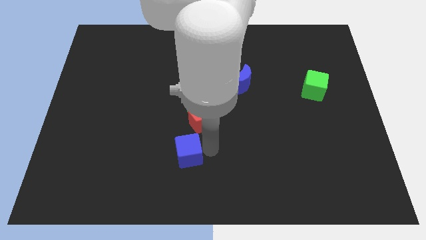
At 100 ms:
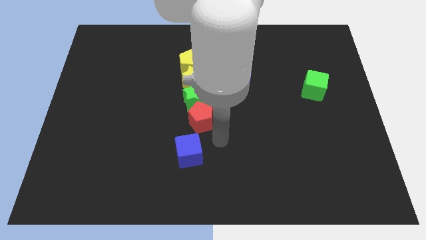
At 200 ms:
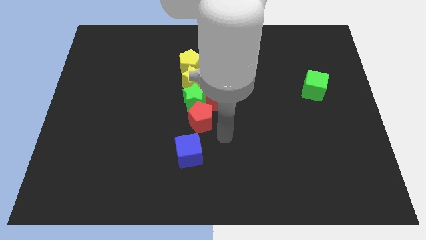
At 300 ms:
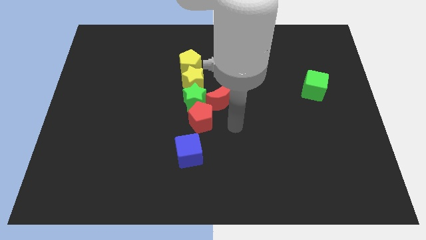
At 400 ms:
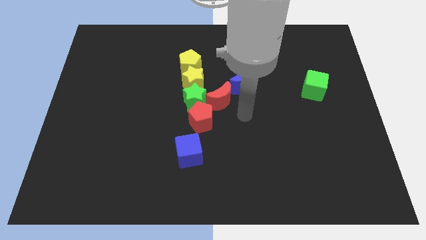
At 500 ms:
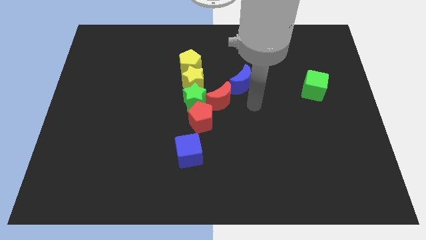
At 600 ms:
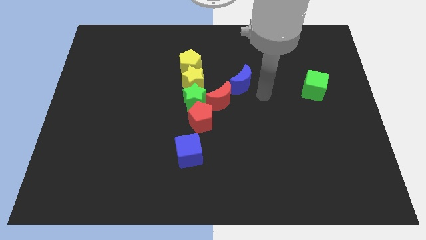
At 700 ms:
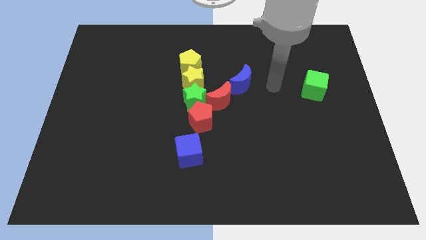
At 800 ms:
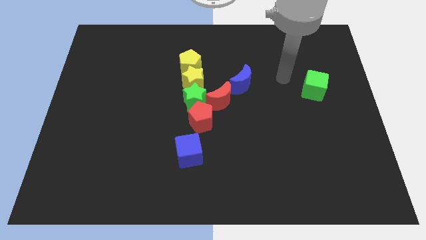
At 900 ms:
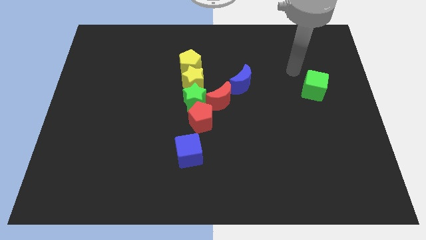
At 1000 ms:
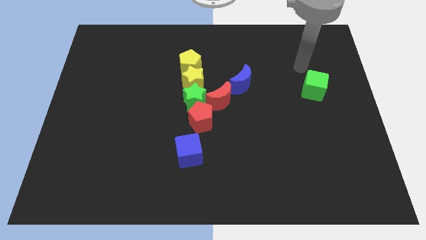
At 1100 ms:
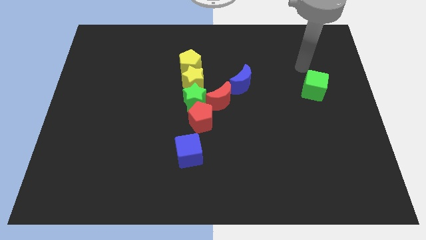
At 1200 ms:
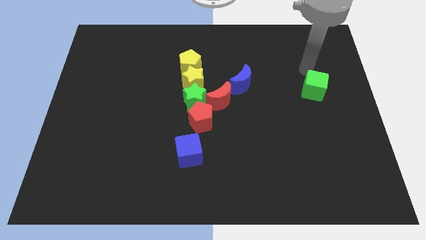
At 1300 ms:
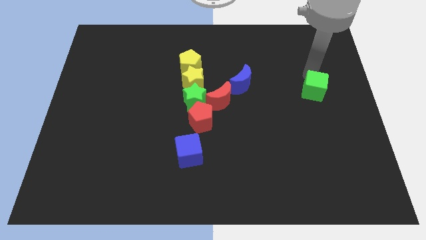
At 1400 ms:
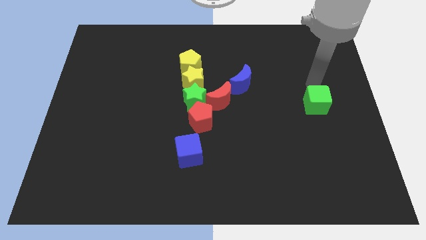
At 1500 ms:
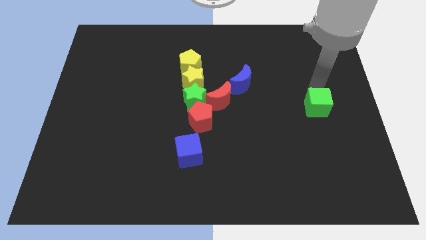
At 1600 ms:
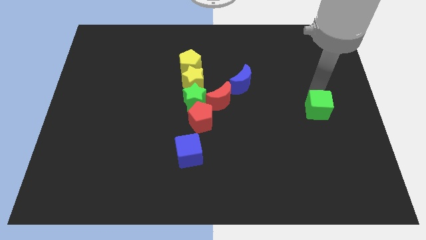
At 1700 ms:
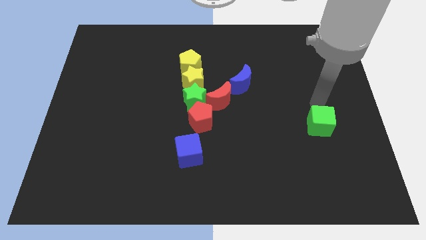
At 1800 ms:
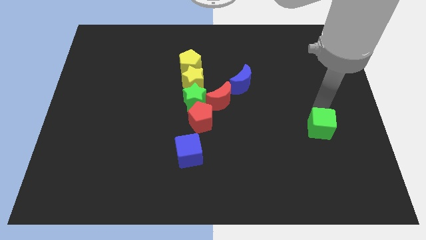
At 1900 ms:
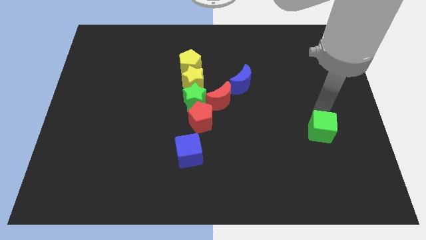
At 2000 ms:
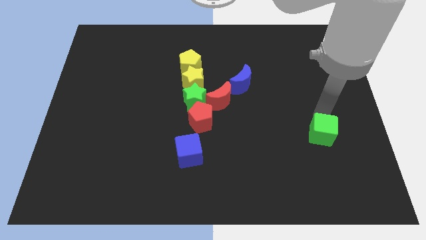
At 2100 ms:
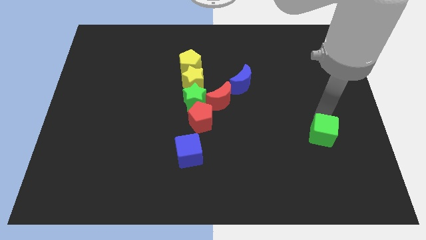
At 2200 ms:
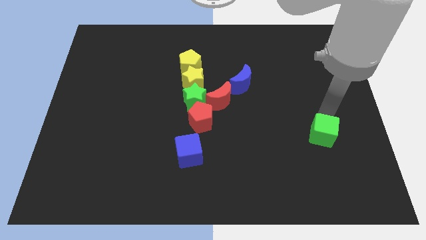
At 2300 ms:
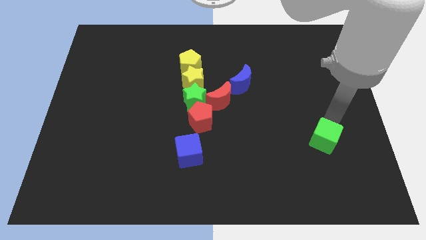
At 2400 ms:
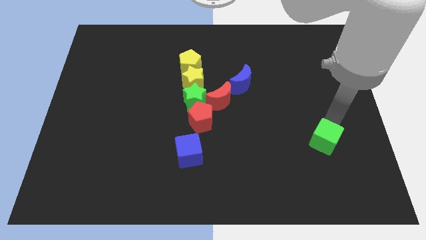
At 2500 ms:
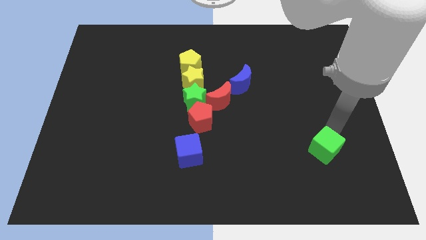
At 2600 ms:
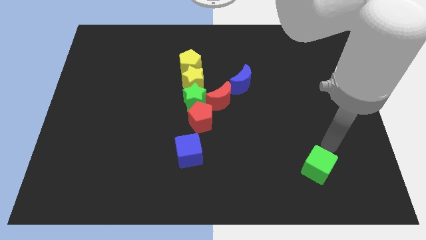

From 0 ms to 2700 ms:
push the green cube towards the bottom of the board

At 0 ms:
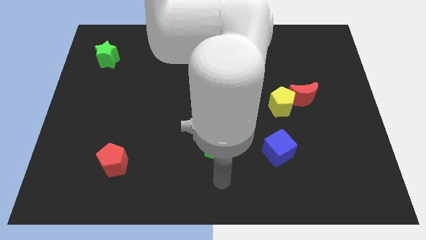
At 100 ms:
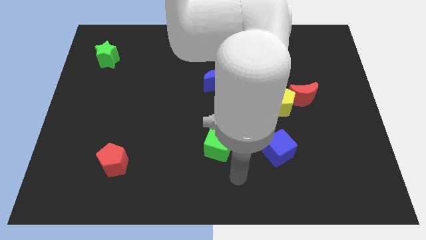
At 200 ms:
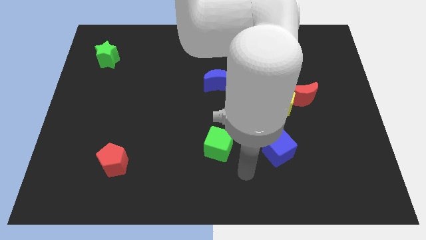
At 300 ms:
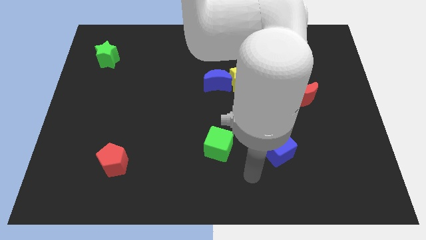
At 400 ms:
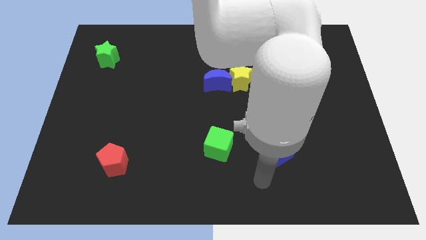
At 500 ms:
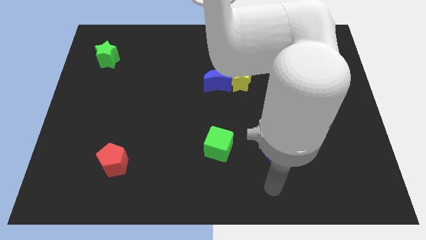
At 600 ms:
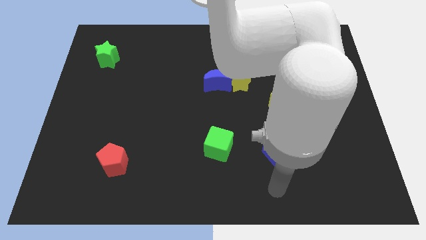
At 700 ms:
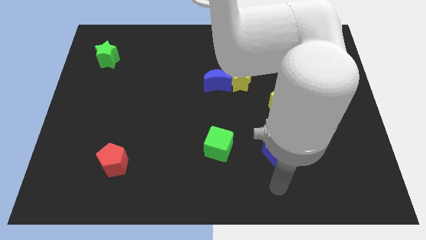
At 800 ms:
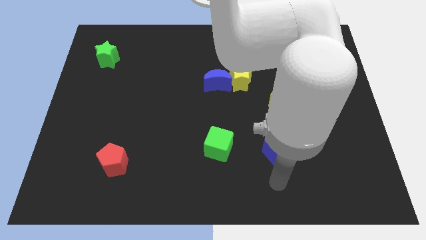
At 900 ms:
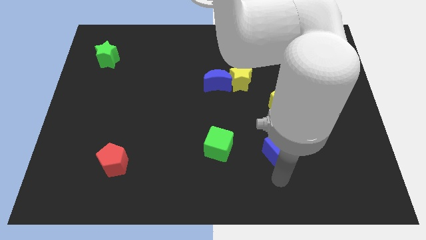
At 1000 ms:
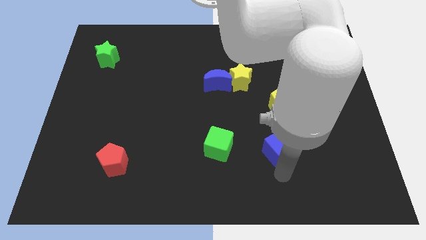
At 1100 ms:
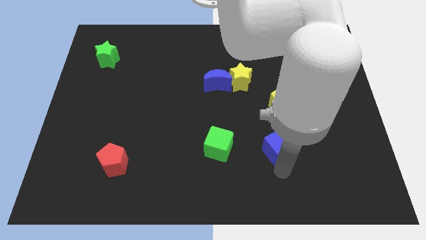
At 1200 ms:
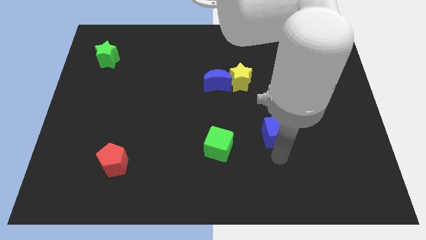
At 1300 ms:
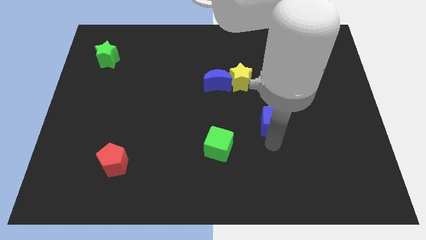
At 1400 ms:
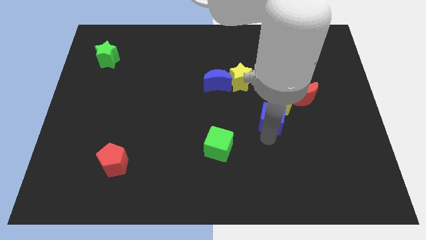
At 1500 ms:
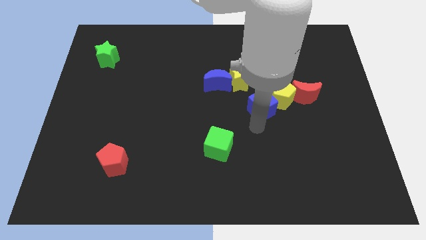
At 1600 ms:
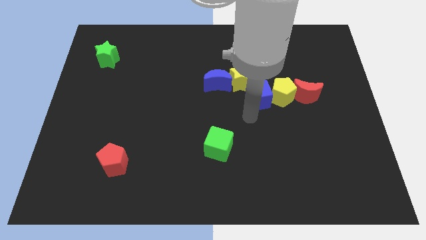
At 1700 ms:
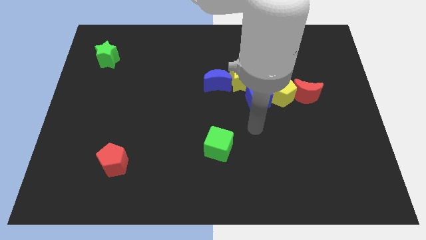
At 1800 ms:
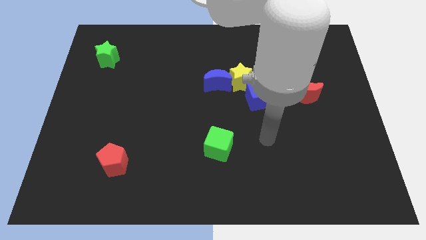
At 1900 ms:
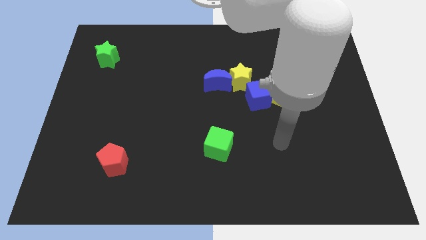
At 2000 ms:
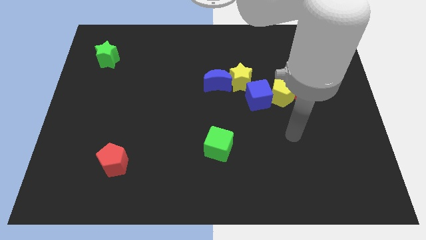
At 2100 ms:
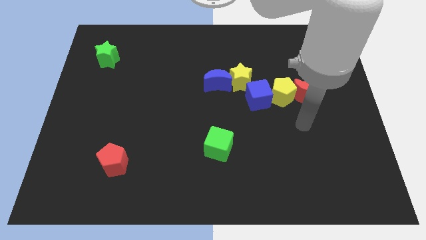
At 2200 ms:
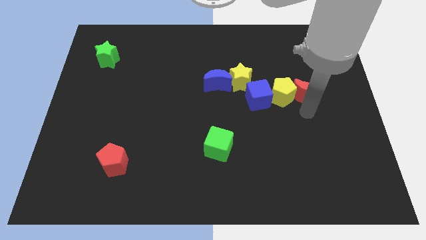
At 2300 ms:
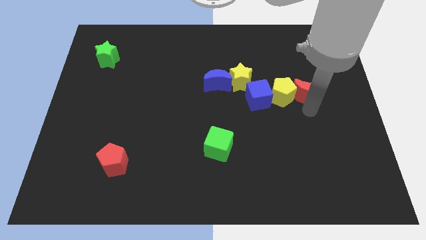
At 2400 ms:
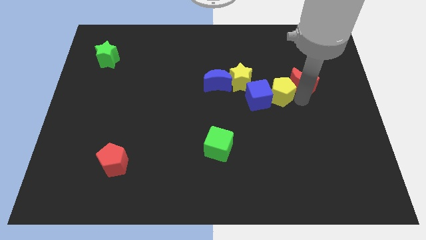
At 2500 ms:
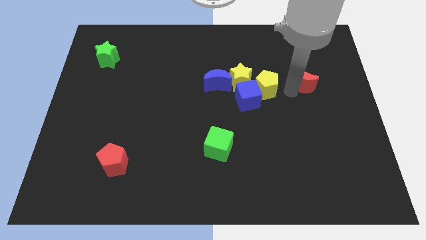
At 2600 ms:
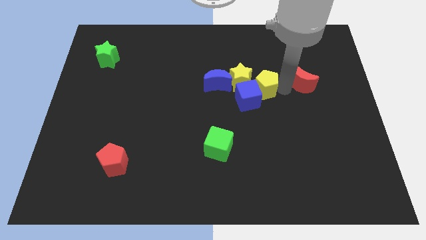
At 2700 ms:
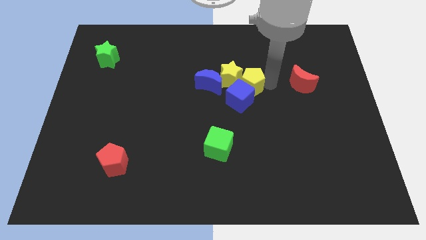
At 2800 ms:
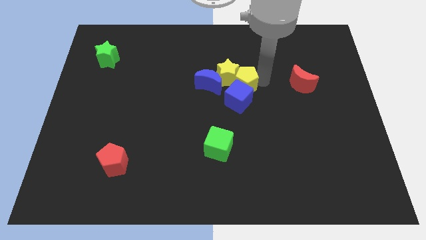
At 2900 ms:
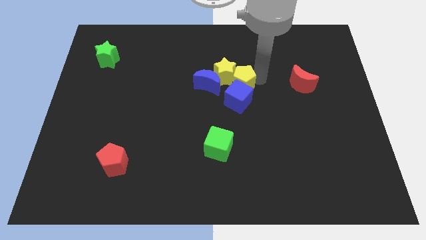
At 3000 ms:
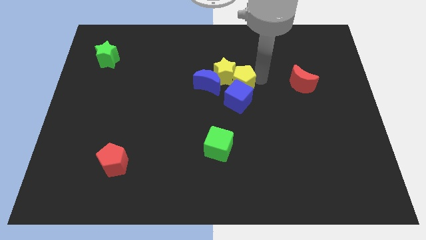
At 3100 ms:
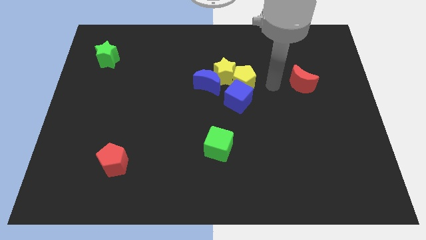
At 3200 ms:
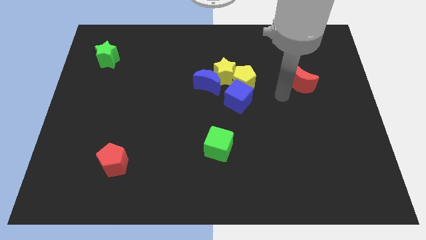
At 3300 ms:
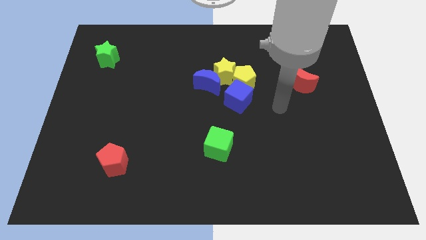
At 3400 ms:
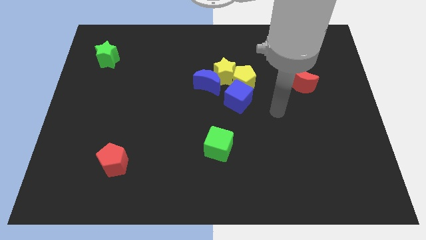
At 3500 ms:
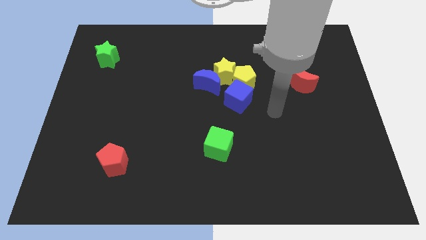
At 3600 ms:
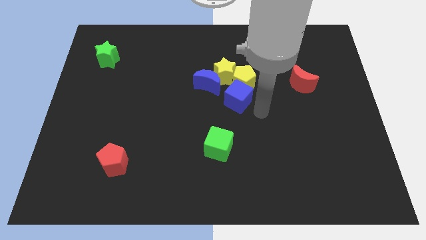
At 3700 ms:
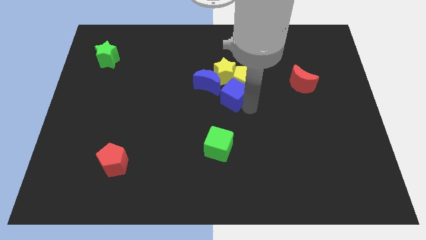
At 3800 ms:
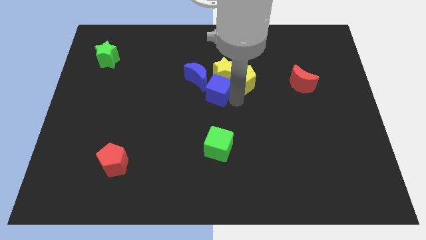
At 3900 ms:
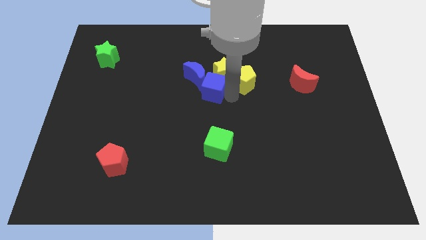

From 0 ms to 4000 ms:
push the blue cube and yellow pentagon into the yellow star and blue crescent

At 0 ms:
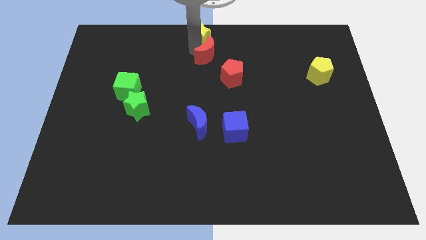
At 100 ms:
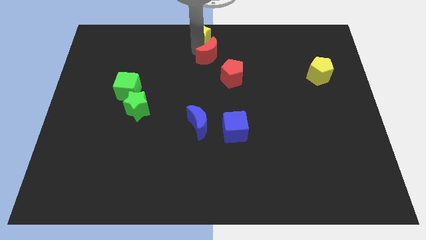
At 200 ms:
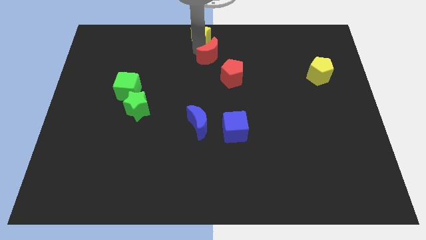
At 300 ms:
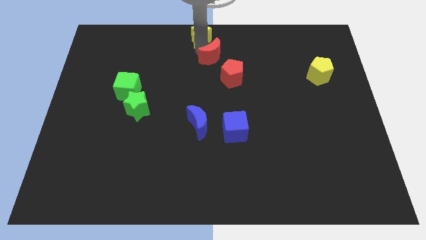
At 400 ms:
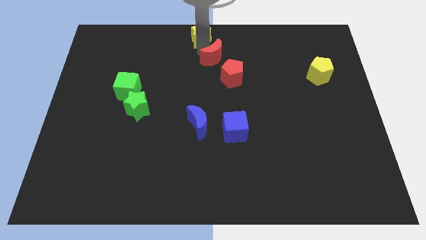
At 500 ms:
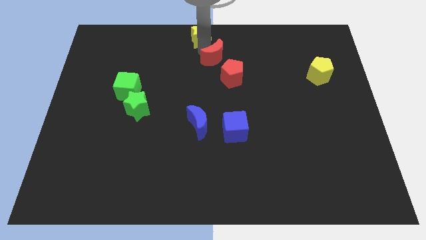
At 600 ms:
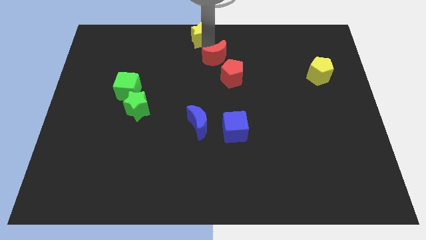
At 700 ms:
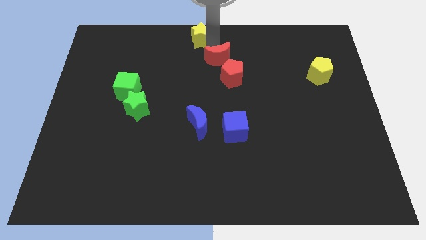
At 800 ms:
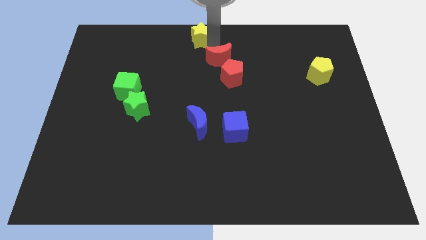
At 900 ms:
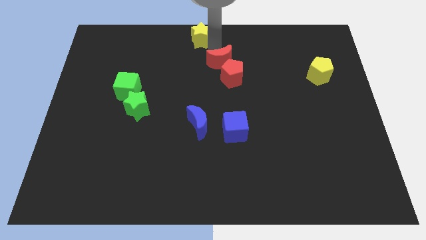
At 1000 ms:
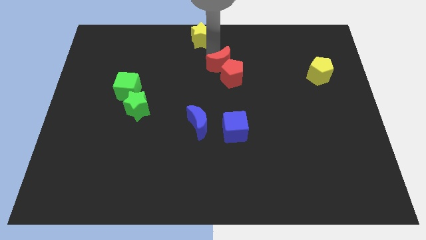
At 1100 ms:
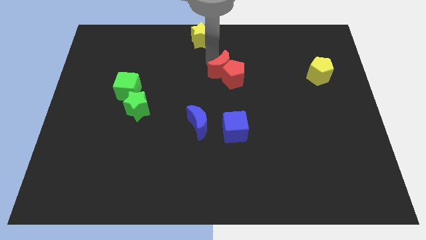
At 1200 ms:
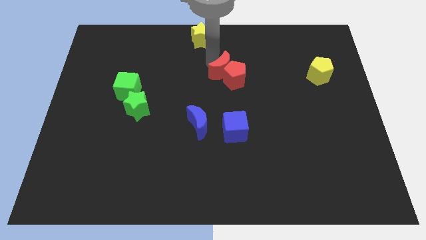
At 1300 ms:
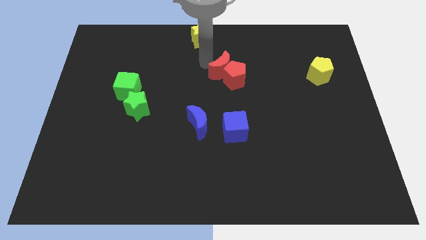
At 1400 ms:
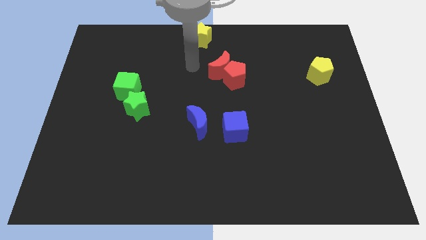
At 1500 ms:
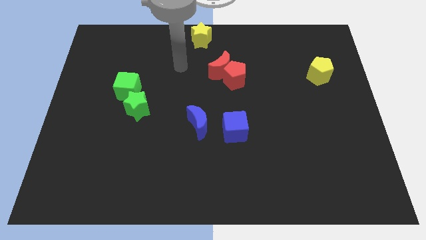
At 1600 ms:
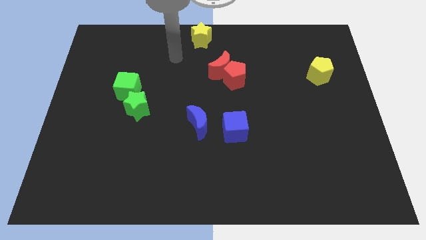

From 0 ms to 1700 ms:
move the red moon away from the yellow star

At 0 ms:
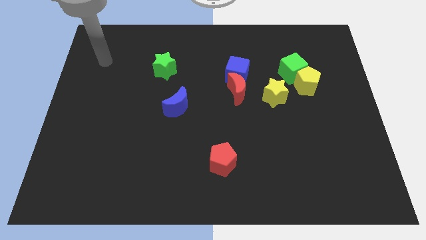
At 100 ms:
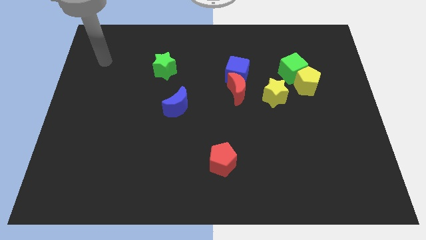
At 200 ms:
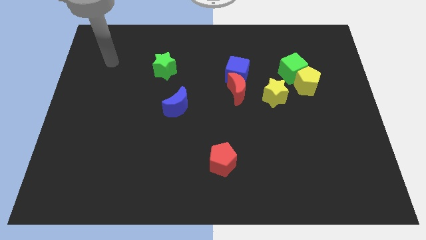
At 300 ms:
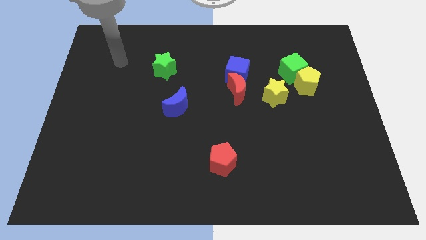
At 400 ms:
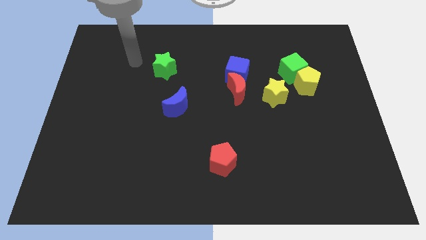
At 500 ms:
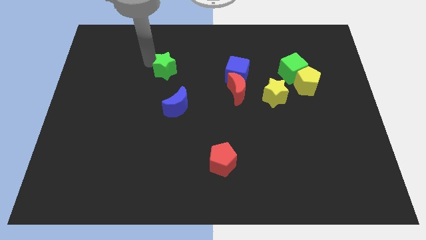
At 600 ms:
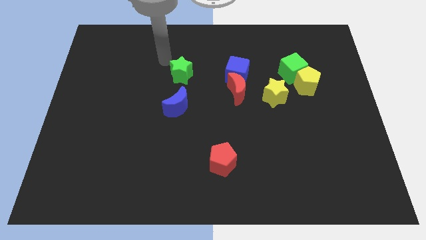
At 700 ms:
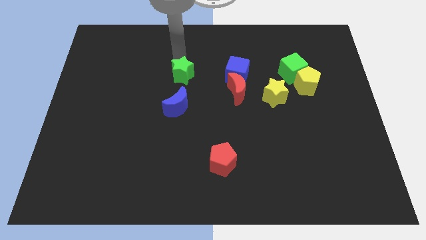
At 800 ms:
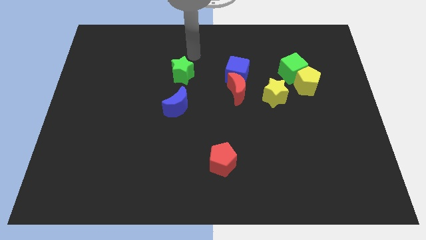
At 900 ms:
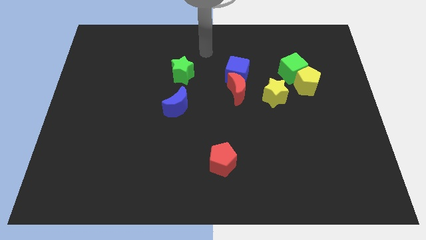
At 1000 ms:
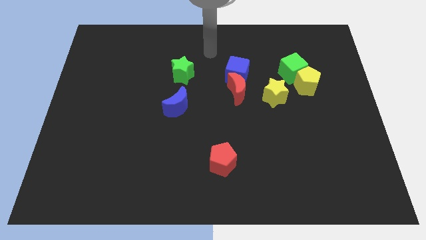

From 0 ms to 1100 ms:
move the star slightly to the right
